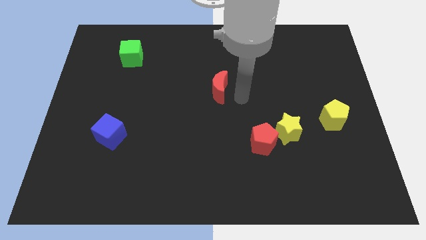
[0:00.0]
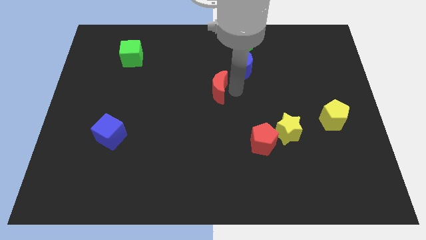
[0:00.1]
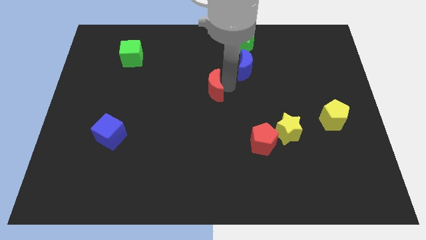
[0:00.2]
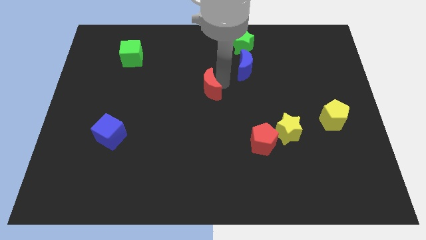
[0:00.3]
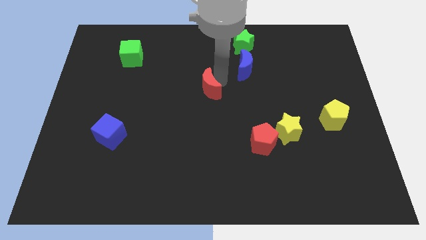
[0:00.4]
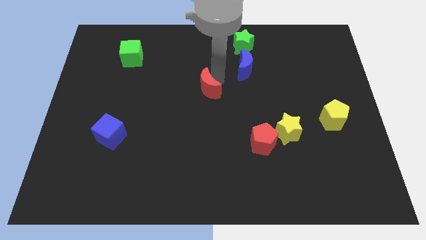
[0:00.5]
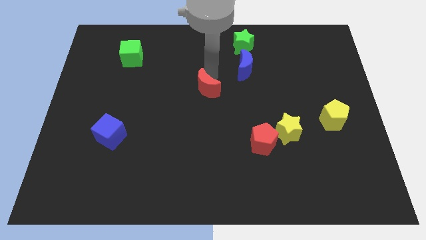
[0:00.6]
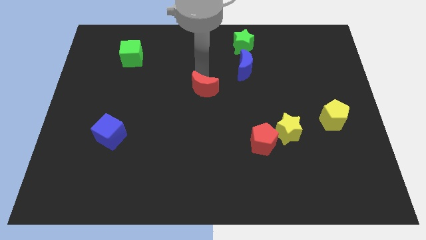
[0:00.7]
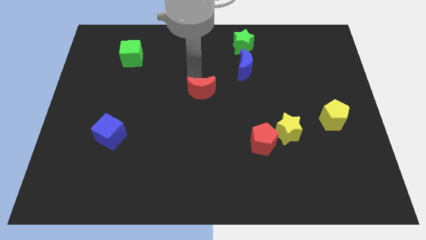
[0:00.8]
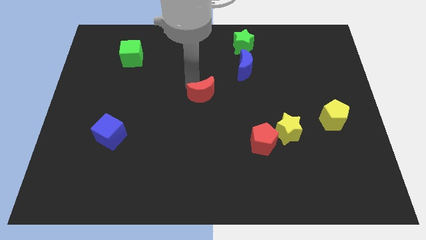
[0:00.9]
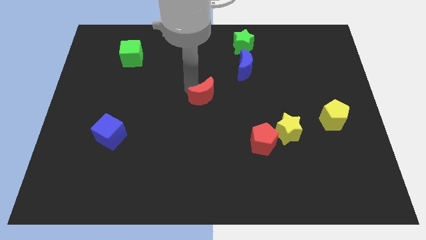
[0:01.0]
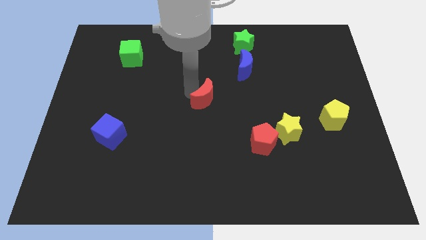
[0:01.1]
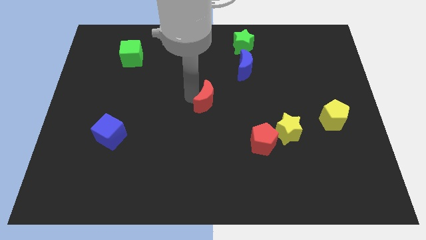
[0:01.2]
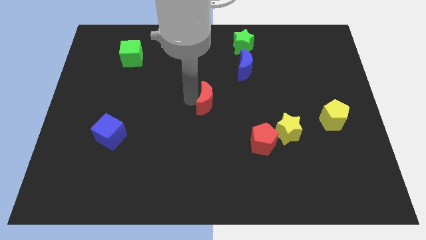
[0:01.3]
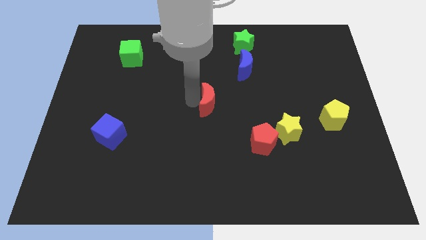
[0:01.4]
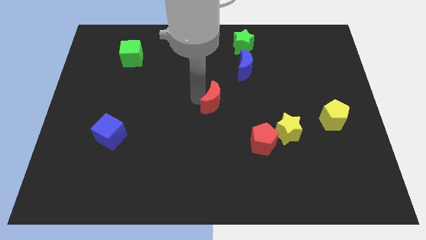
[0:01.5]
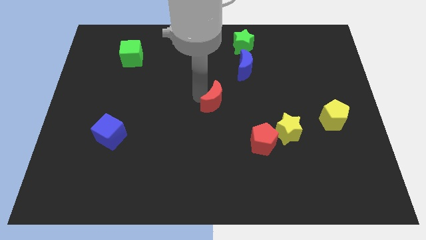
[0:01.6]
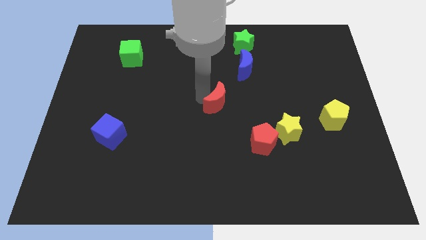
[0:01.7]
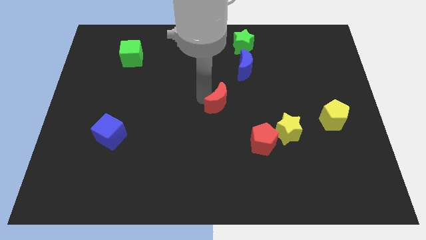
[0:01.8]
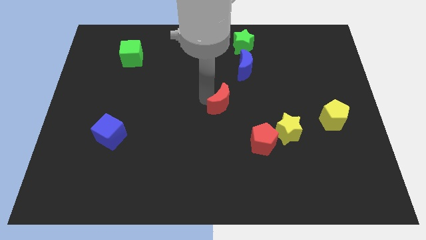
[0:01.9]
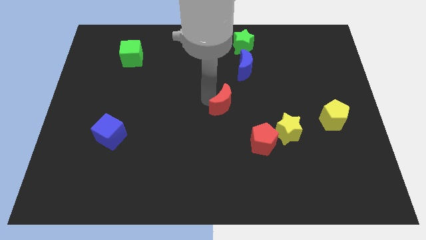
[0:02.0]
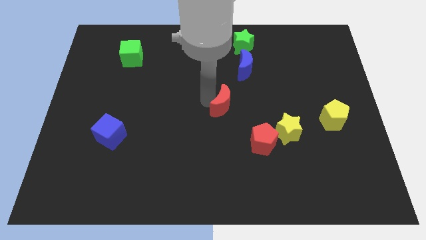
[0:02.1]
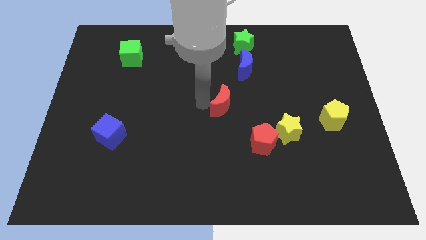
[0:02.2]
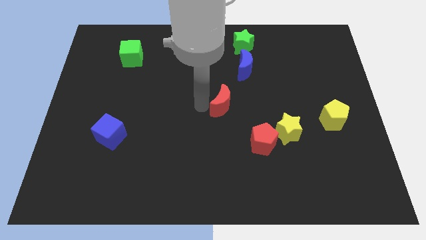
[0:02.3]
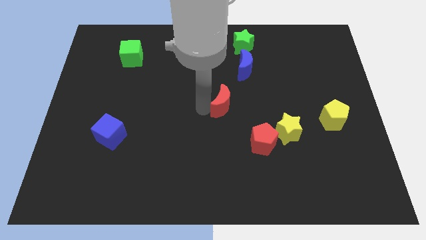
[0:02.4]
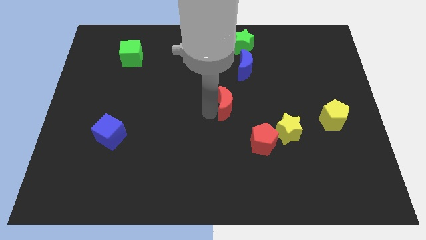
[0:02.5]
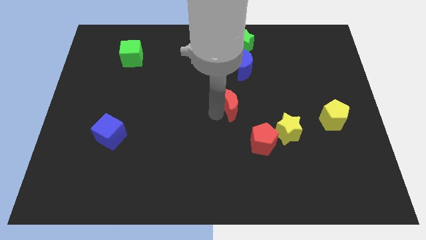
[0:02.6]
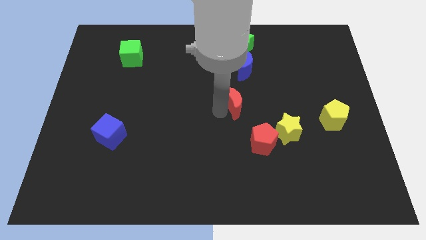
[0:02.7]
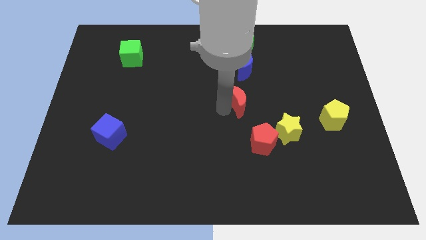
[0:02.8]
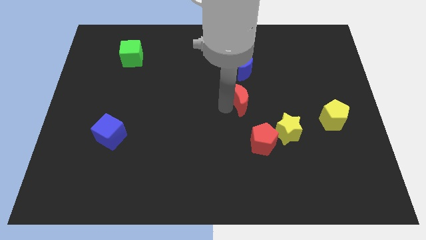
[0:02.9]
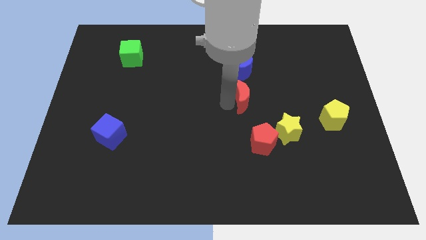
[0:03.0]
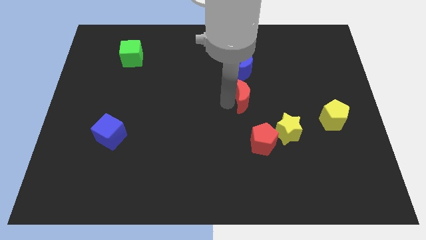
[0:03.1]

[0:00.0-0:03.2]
place the red moon down to the blue crescent

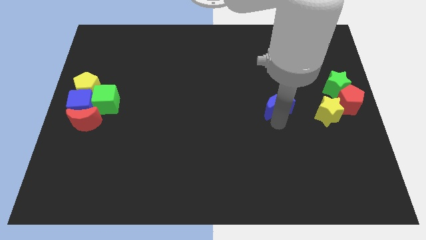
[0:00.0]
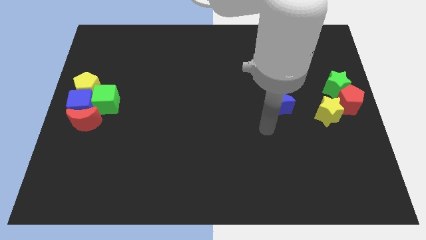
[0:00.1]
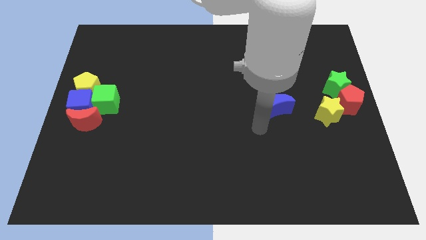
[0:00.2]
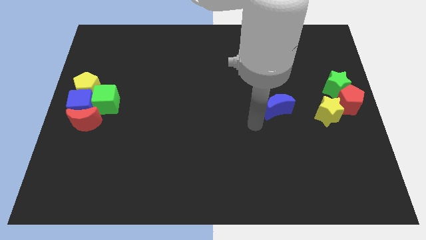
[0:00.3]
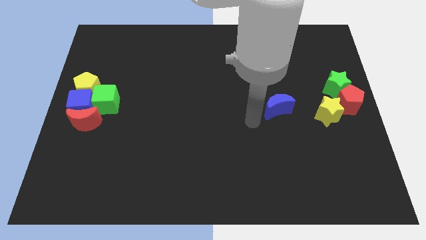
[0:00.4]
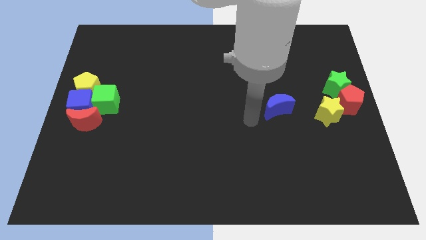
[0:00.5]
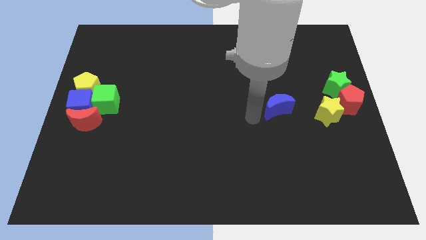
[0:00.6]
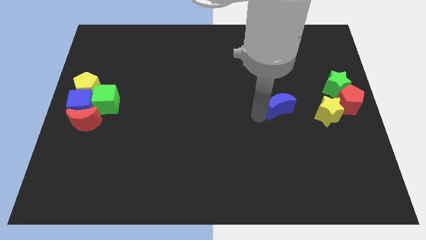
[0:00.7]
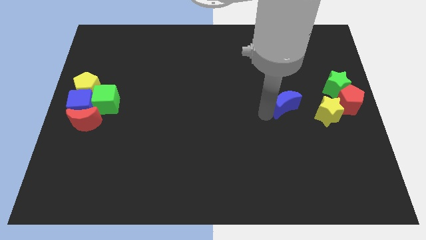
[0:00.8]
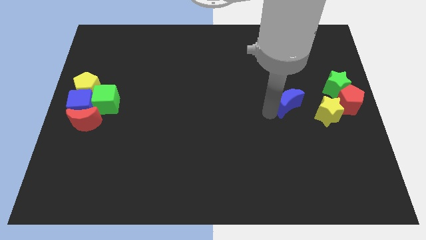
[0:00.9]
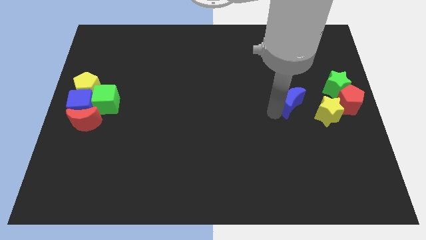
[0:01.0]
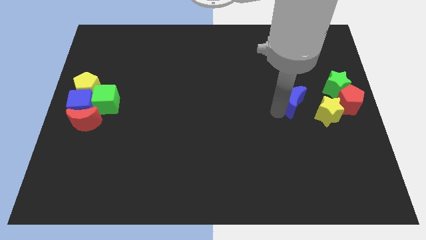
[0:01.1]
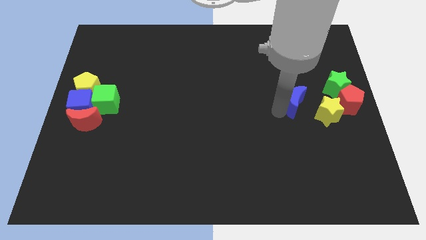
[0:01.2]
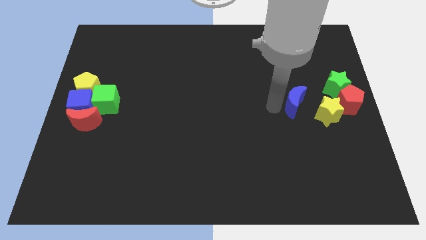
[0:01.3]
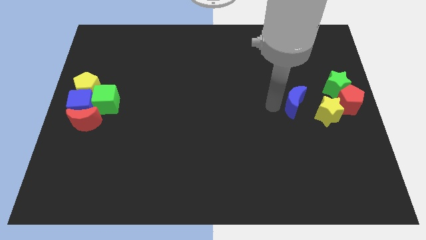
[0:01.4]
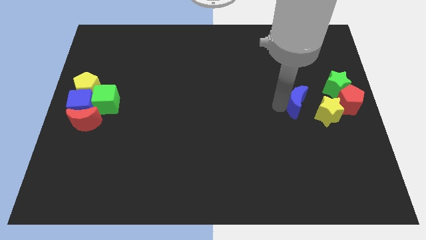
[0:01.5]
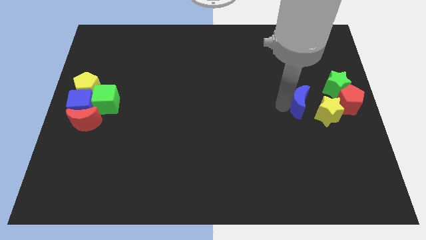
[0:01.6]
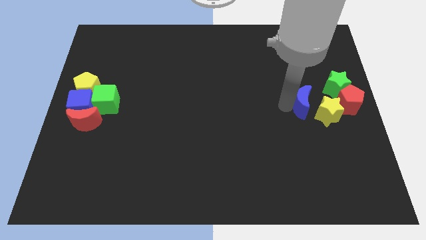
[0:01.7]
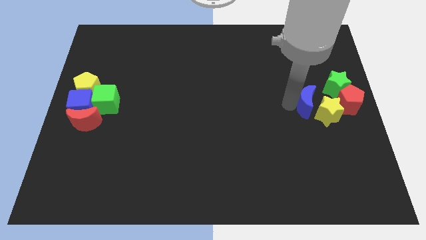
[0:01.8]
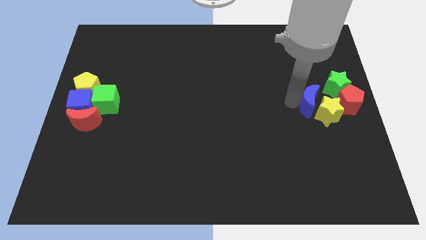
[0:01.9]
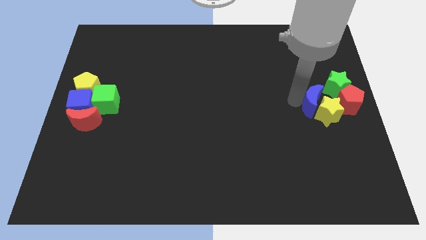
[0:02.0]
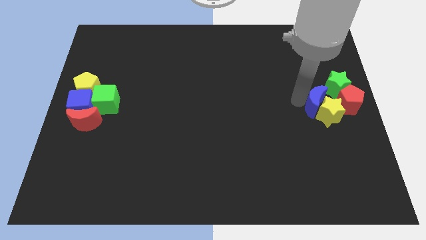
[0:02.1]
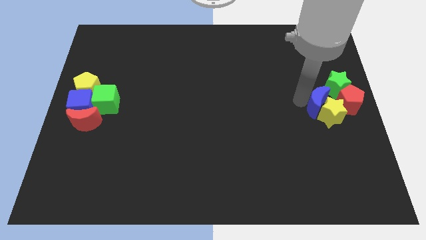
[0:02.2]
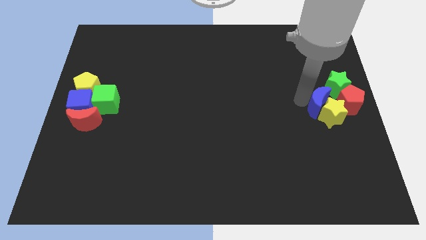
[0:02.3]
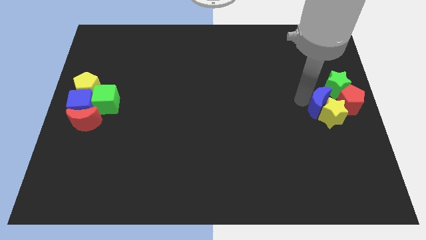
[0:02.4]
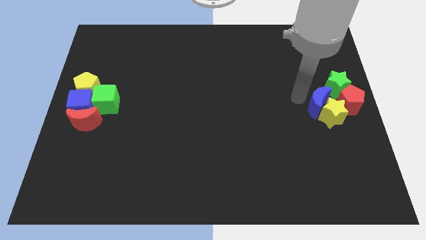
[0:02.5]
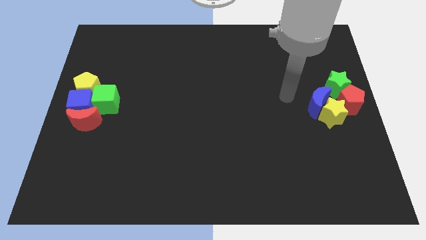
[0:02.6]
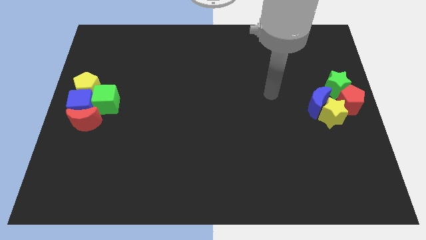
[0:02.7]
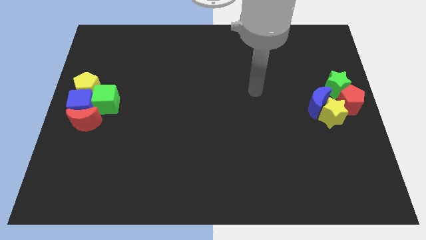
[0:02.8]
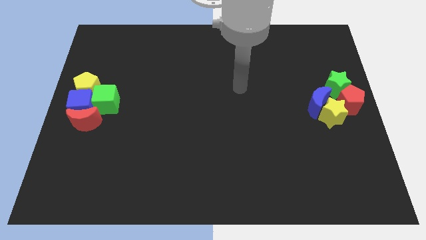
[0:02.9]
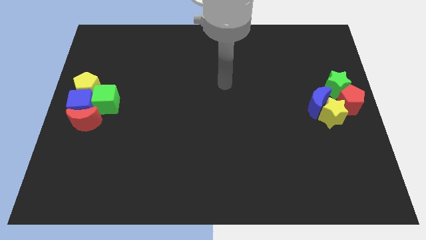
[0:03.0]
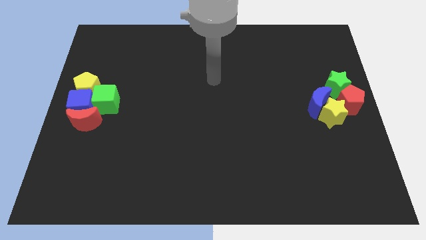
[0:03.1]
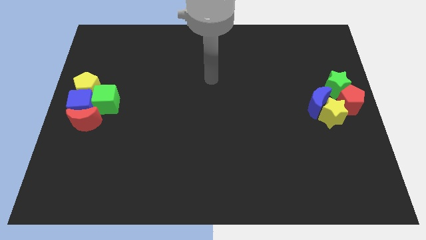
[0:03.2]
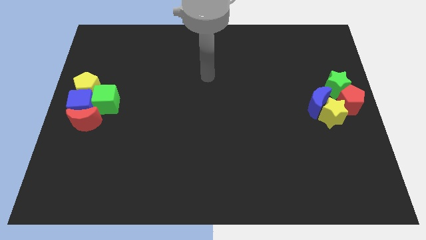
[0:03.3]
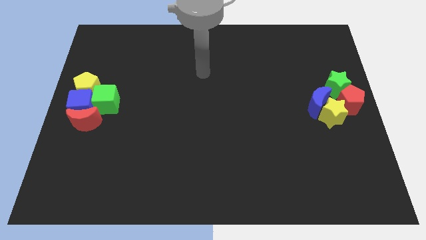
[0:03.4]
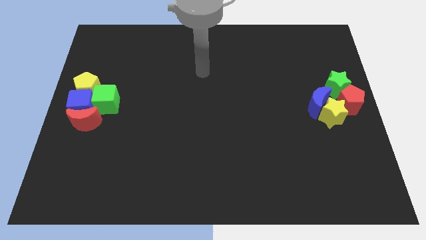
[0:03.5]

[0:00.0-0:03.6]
add the blue moon to the group of blocks at the center right of the board

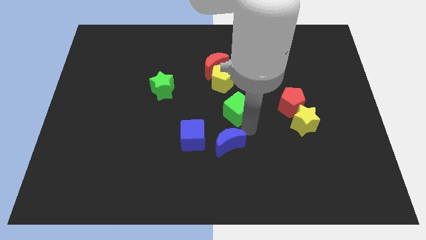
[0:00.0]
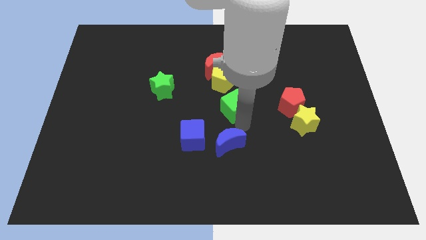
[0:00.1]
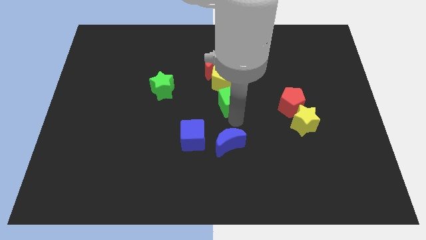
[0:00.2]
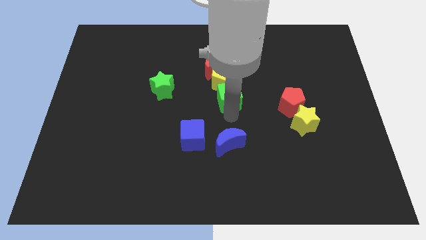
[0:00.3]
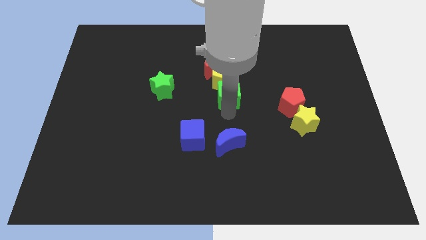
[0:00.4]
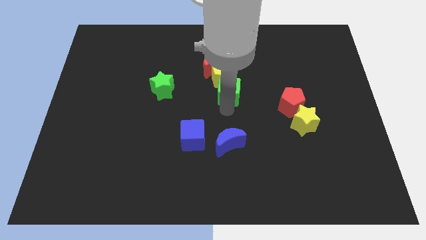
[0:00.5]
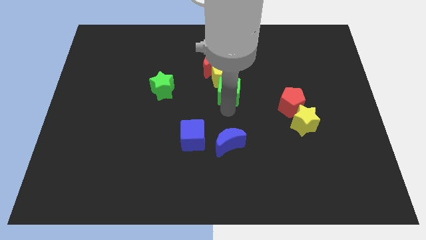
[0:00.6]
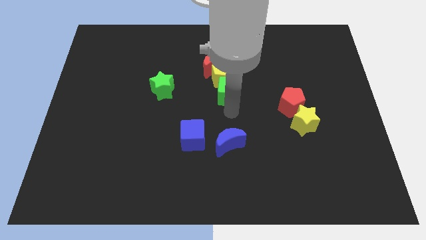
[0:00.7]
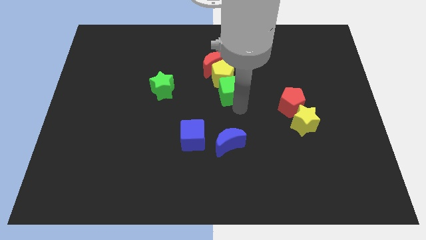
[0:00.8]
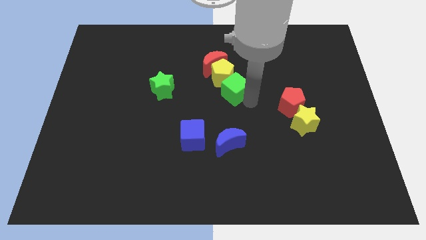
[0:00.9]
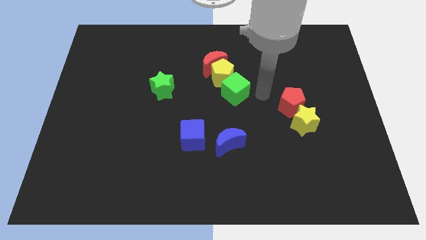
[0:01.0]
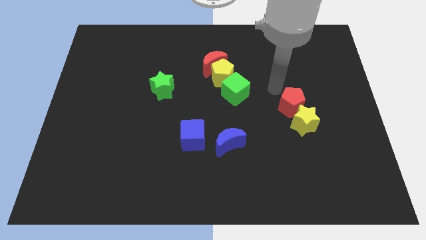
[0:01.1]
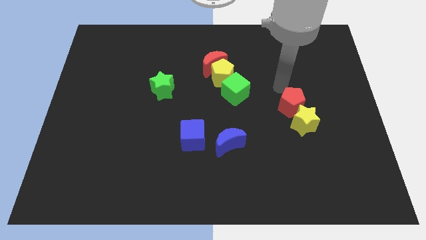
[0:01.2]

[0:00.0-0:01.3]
push the green cube into the yellow pentagon

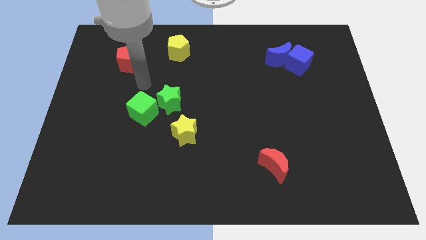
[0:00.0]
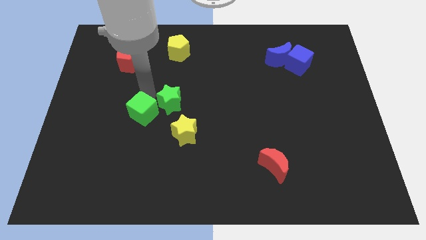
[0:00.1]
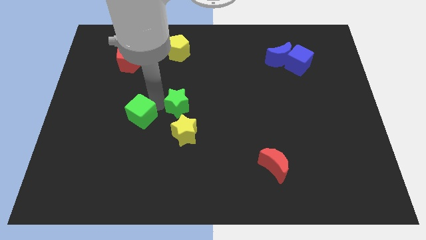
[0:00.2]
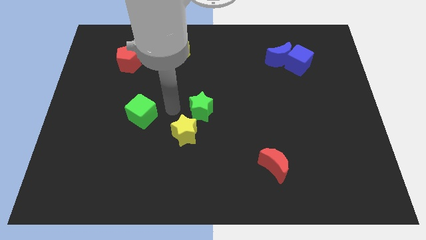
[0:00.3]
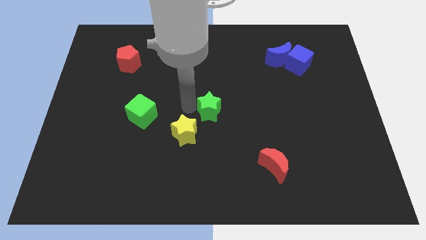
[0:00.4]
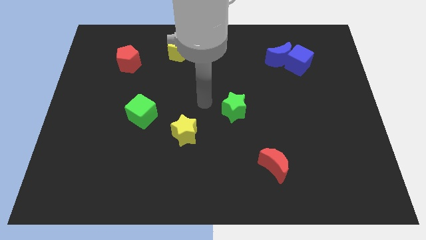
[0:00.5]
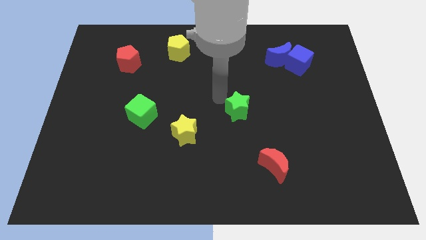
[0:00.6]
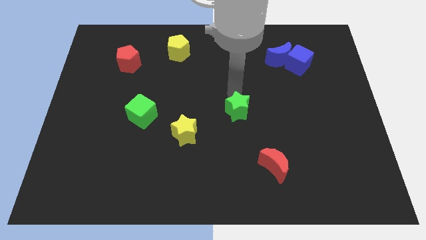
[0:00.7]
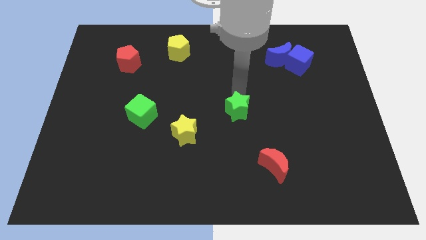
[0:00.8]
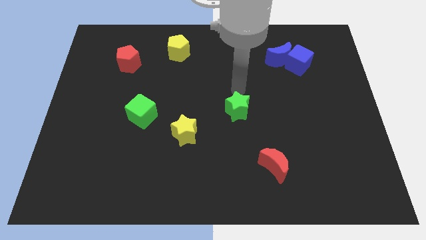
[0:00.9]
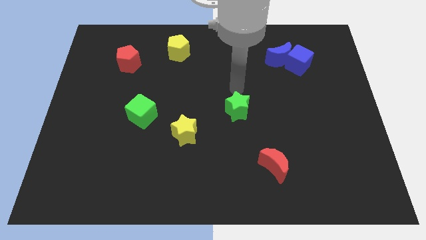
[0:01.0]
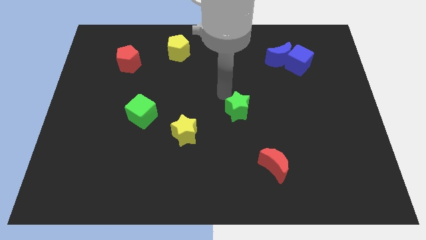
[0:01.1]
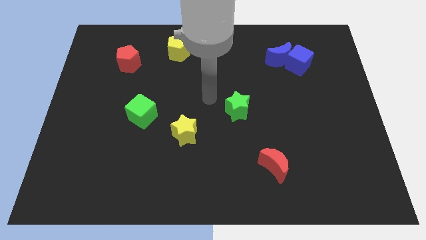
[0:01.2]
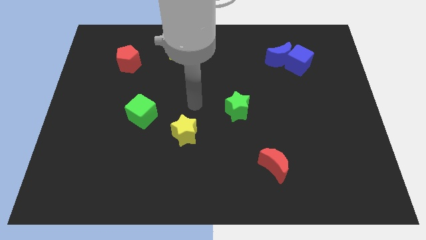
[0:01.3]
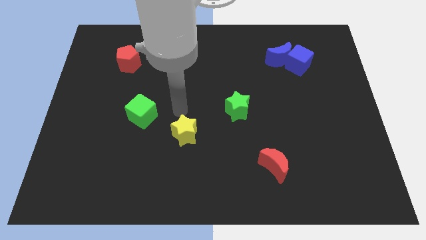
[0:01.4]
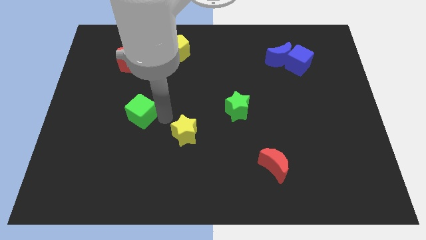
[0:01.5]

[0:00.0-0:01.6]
apart green star and green cube
